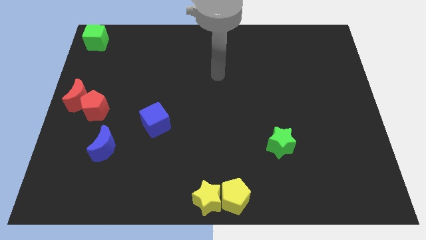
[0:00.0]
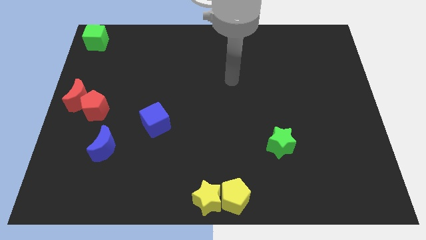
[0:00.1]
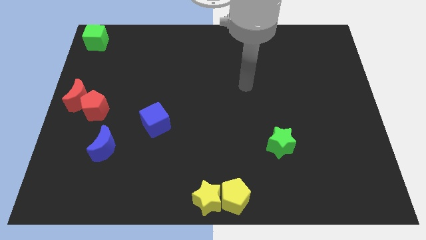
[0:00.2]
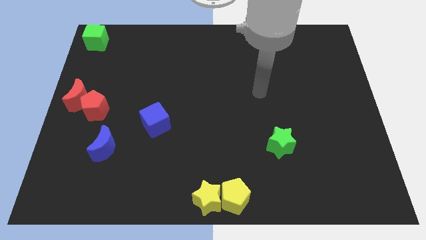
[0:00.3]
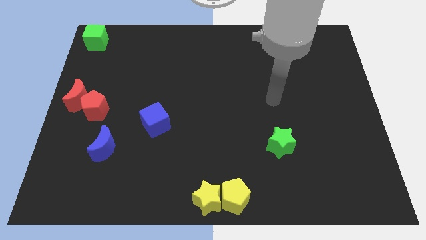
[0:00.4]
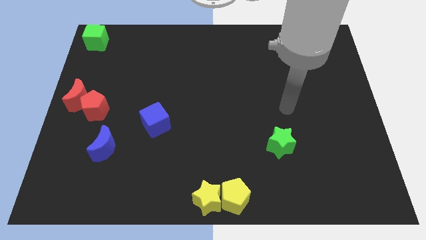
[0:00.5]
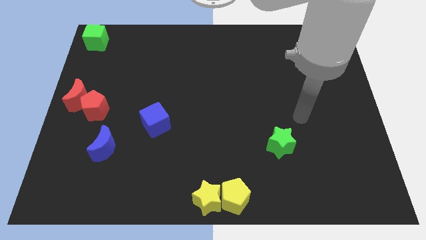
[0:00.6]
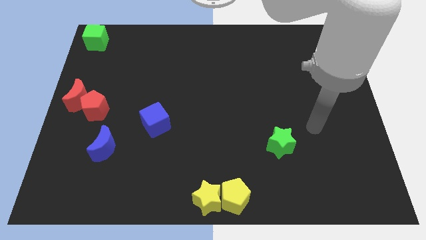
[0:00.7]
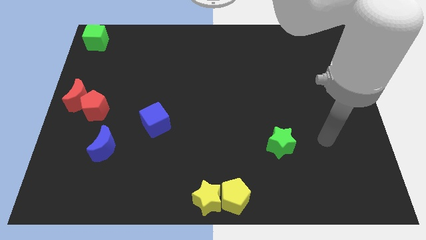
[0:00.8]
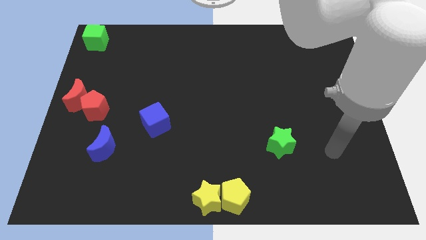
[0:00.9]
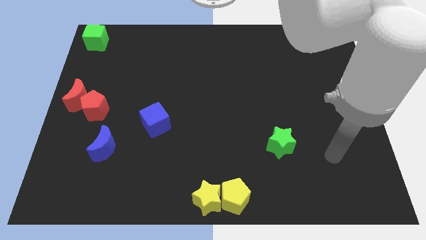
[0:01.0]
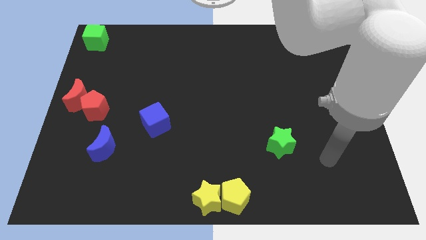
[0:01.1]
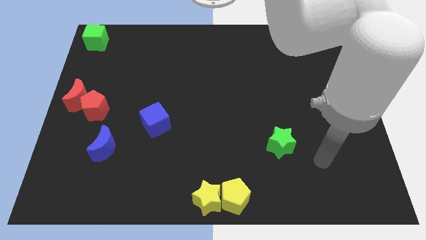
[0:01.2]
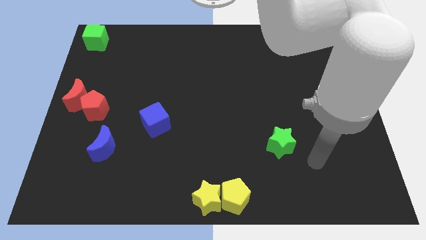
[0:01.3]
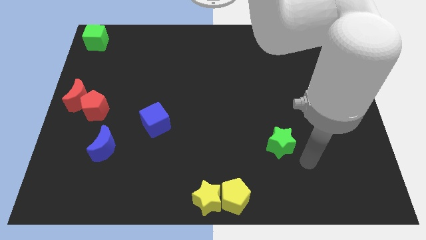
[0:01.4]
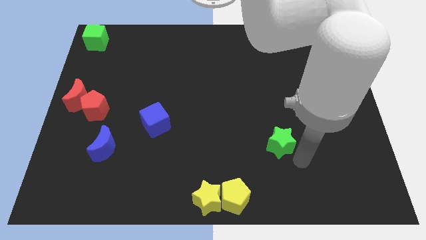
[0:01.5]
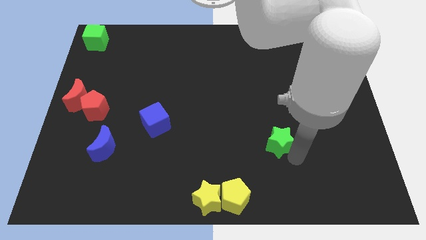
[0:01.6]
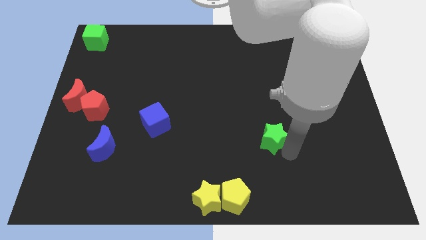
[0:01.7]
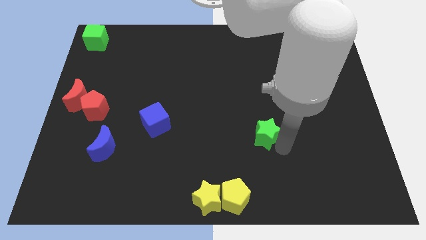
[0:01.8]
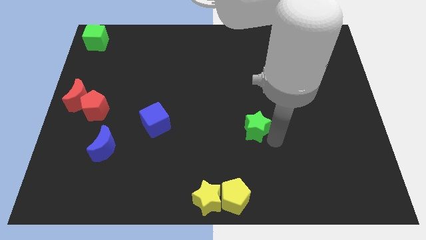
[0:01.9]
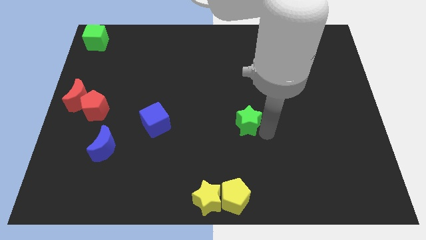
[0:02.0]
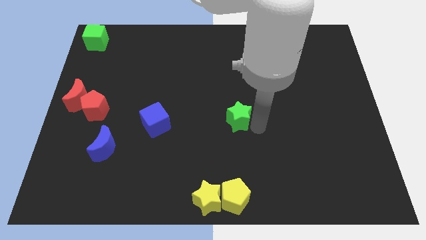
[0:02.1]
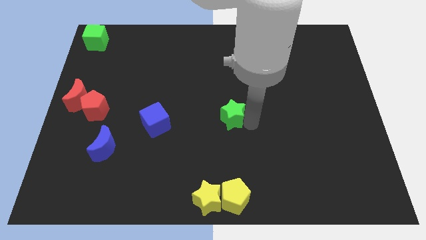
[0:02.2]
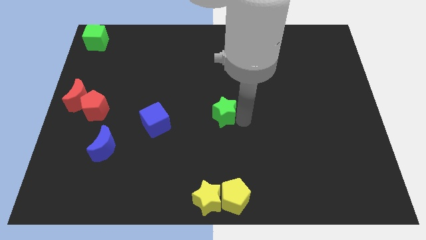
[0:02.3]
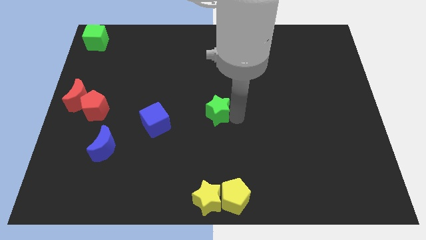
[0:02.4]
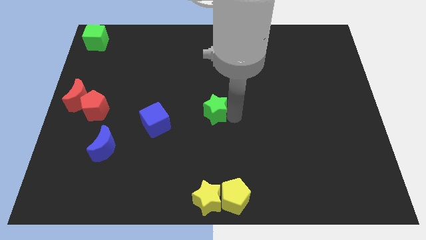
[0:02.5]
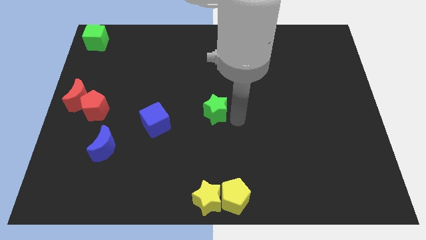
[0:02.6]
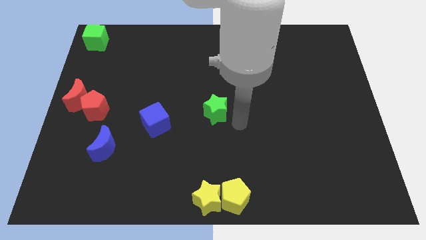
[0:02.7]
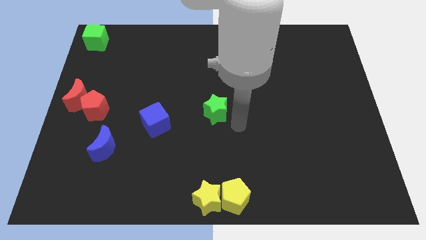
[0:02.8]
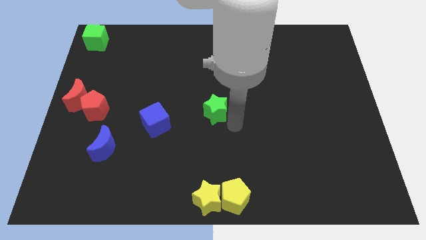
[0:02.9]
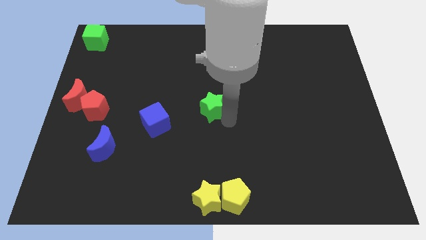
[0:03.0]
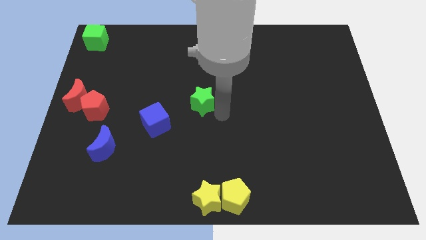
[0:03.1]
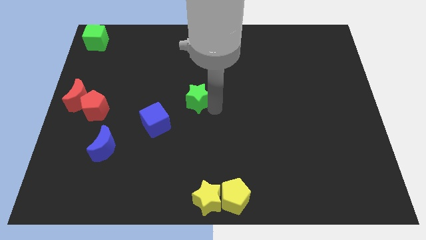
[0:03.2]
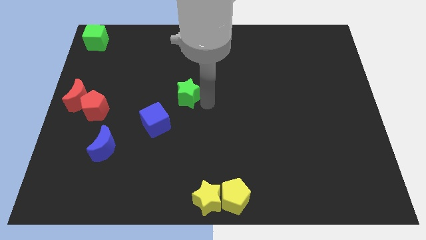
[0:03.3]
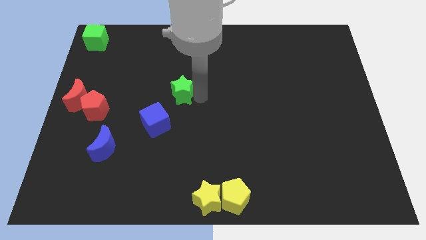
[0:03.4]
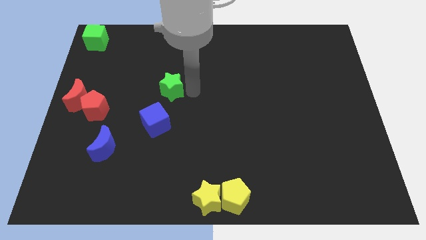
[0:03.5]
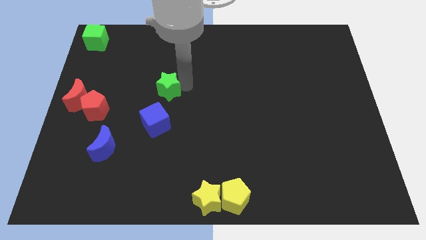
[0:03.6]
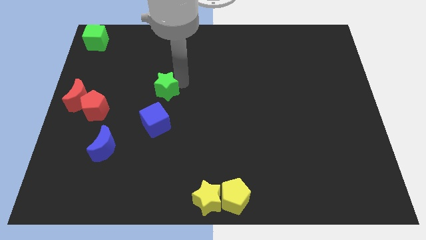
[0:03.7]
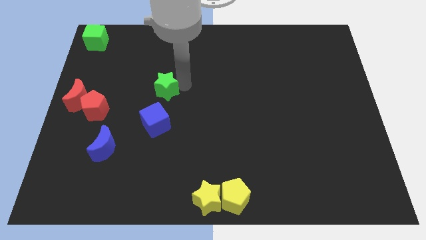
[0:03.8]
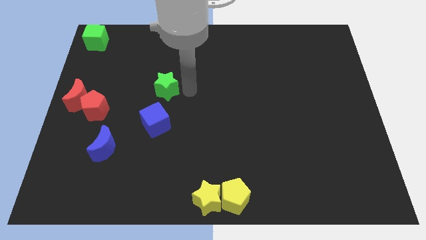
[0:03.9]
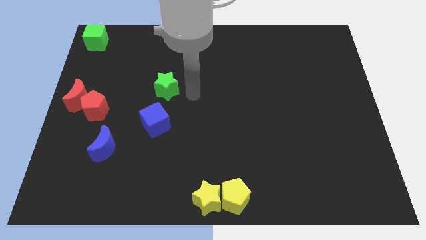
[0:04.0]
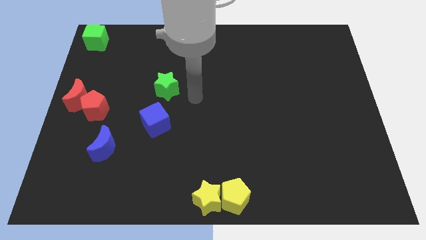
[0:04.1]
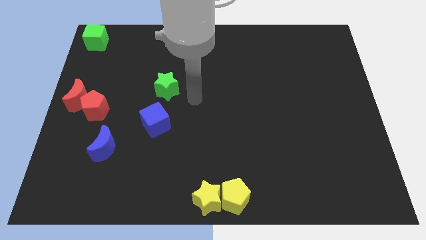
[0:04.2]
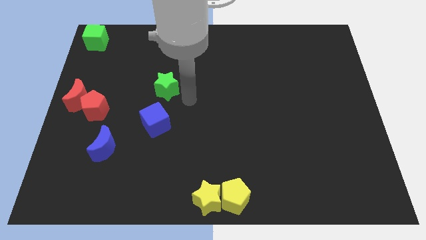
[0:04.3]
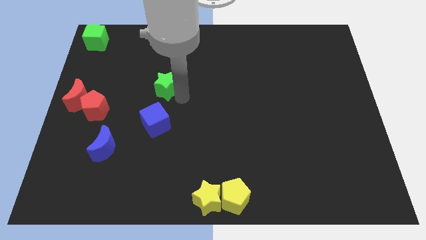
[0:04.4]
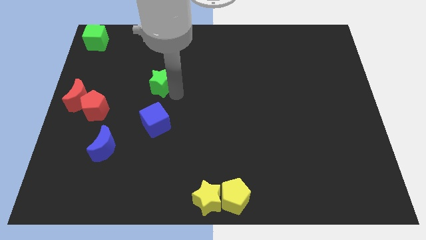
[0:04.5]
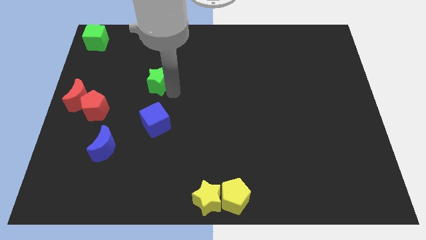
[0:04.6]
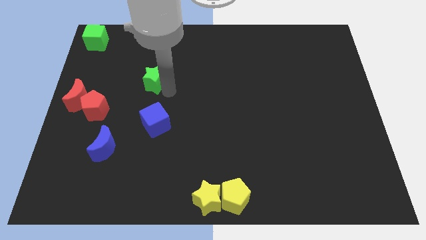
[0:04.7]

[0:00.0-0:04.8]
put the green star on the top side of the blue cube

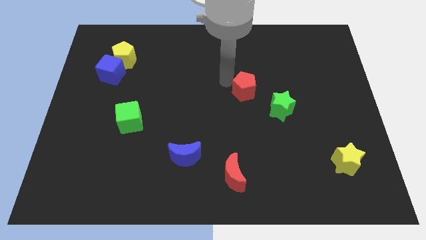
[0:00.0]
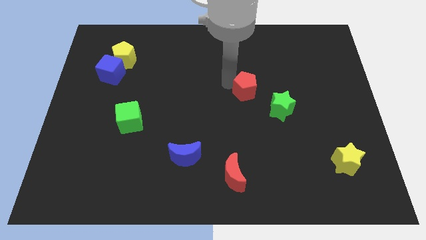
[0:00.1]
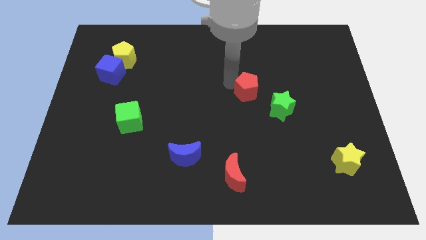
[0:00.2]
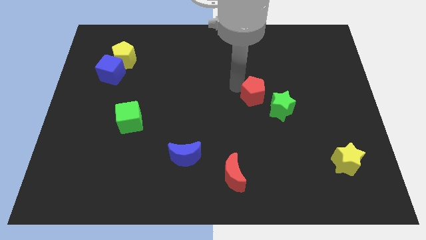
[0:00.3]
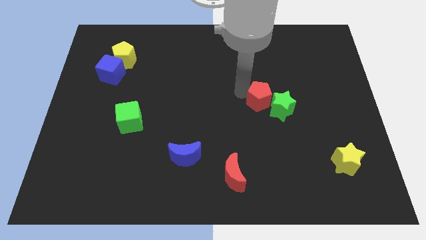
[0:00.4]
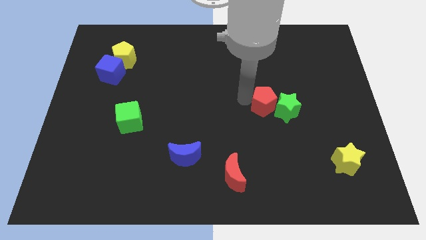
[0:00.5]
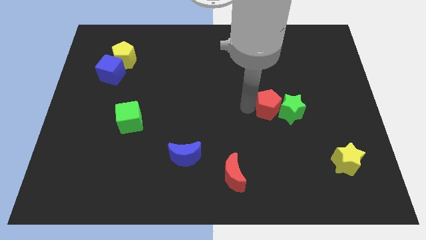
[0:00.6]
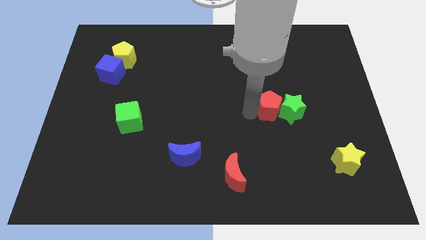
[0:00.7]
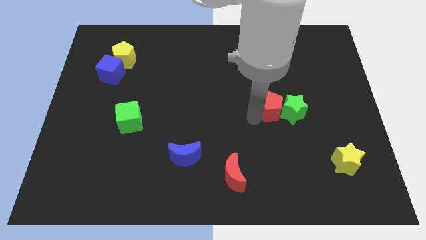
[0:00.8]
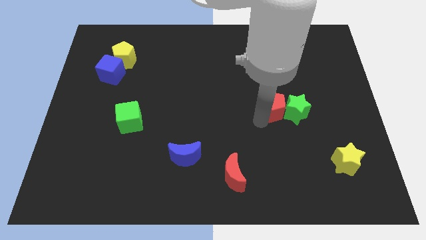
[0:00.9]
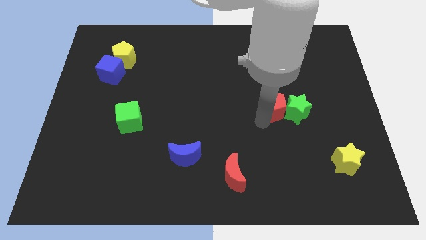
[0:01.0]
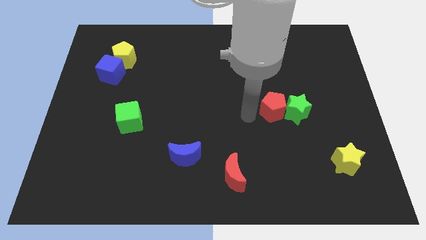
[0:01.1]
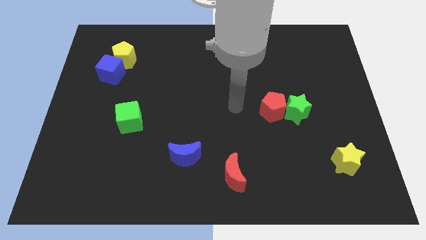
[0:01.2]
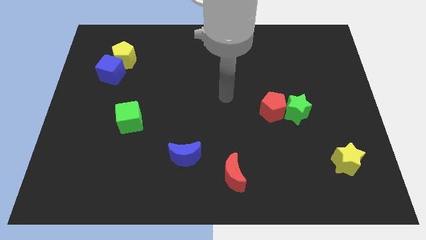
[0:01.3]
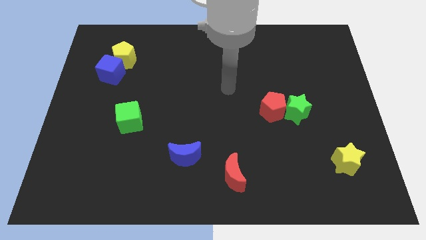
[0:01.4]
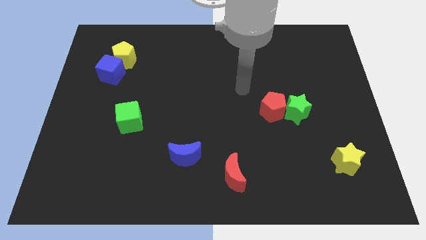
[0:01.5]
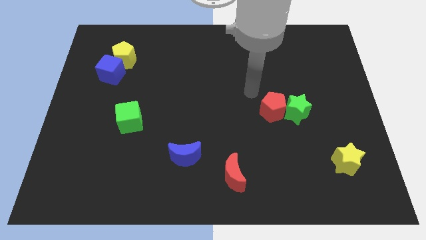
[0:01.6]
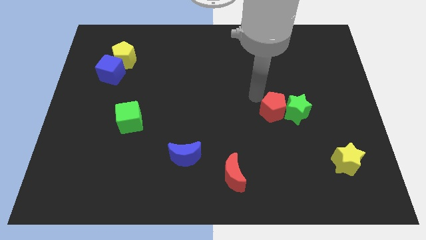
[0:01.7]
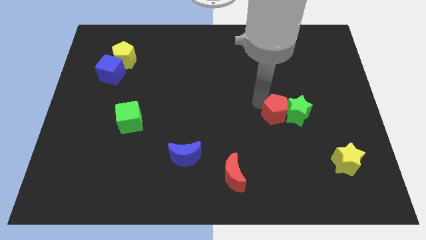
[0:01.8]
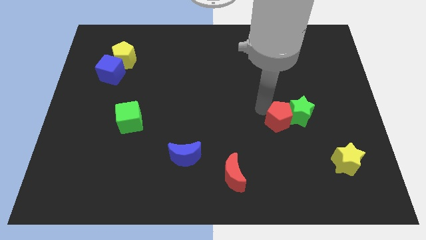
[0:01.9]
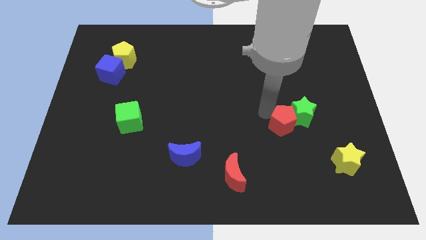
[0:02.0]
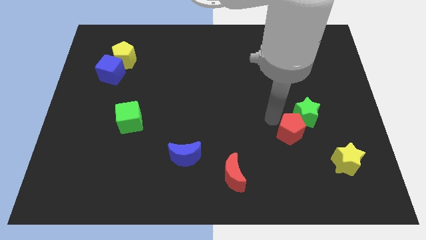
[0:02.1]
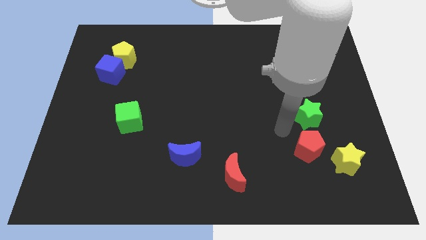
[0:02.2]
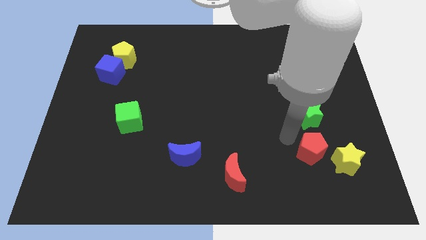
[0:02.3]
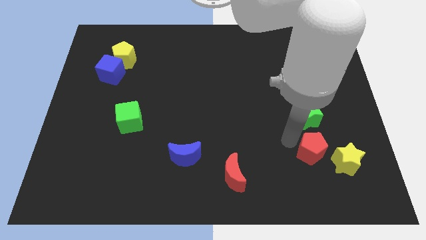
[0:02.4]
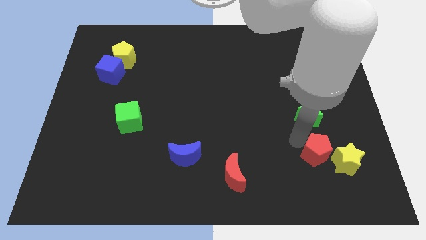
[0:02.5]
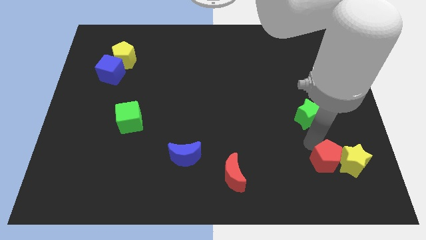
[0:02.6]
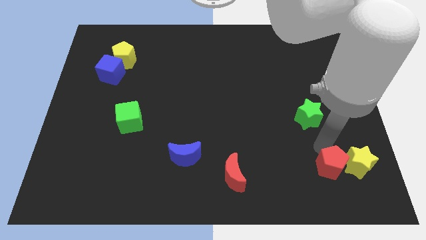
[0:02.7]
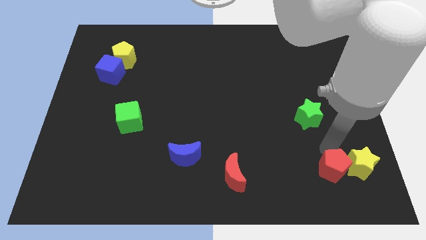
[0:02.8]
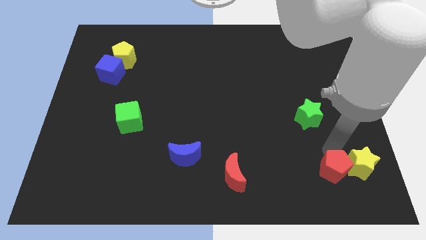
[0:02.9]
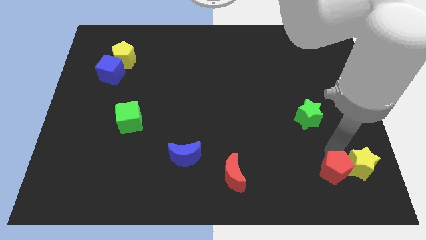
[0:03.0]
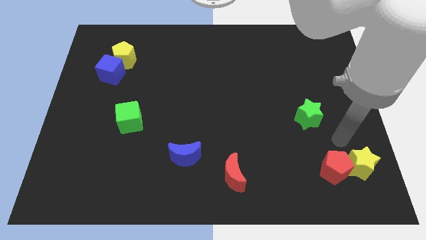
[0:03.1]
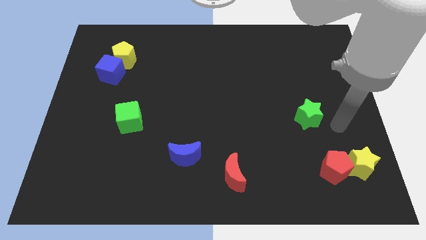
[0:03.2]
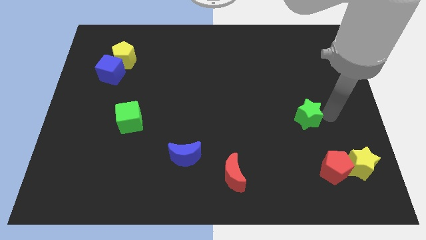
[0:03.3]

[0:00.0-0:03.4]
slide the red pentagon to the left side of the yellow star

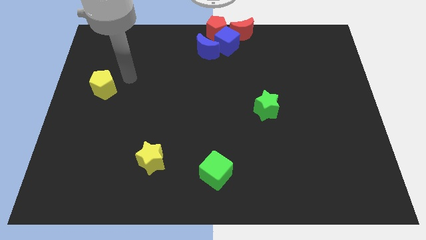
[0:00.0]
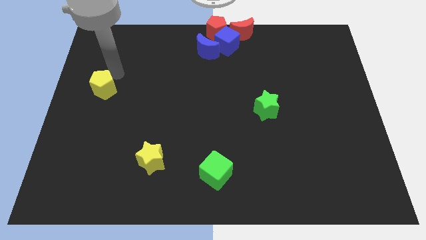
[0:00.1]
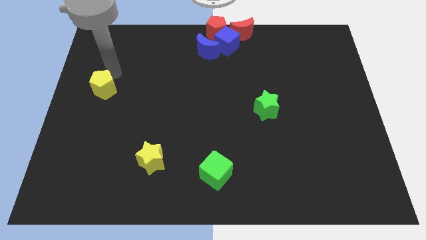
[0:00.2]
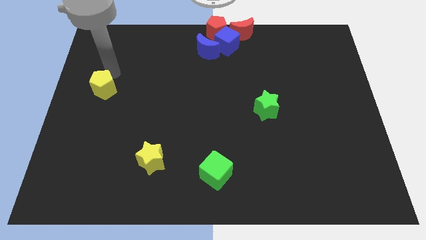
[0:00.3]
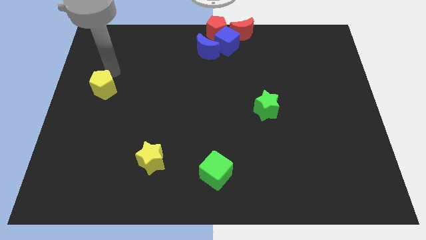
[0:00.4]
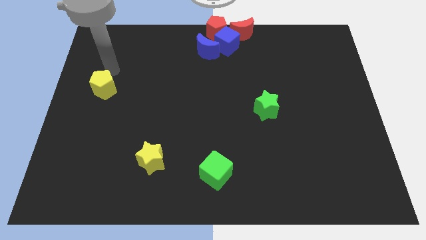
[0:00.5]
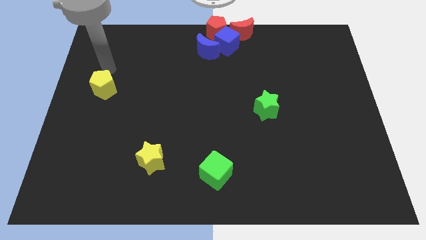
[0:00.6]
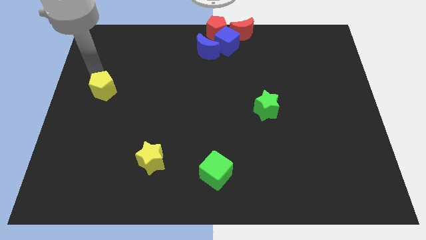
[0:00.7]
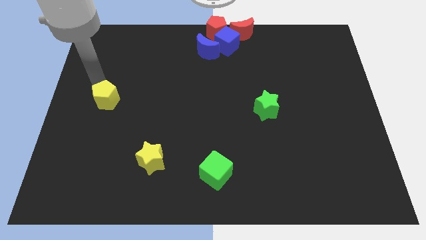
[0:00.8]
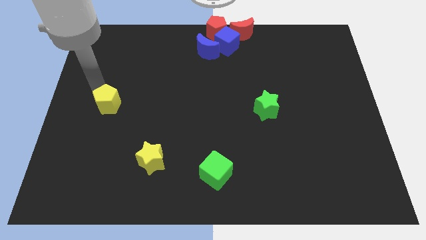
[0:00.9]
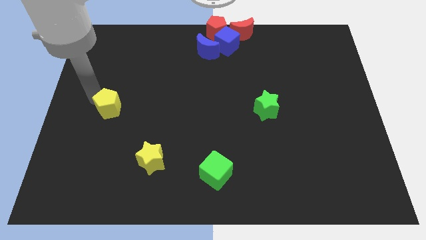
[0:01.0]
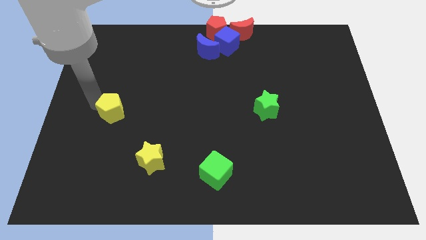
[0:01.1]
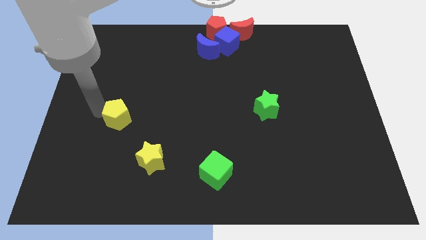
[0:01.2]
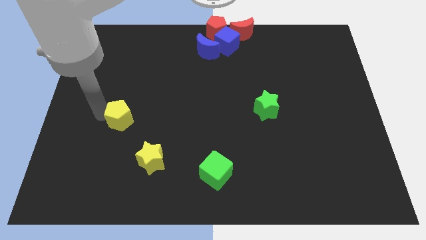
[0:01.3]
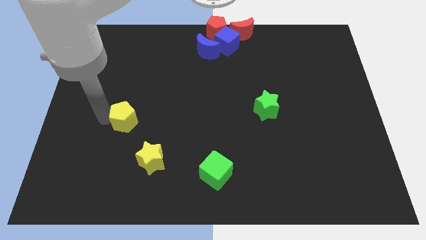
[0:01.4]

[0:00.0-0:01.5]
move the yellow pentagon diagonally on the top left side of the yellow star
